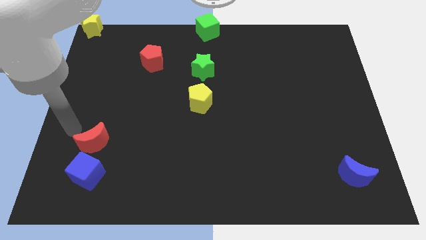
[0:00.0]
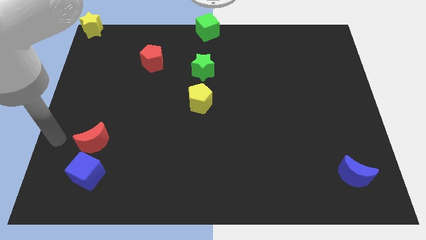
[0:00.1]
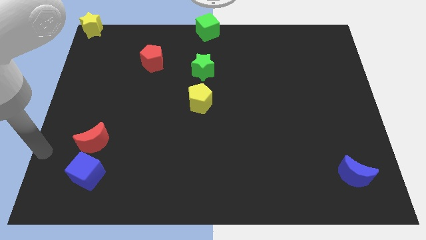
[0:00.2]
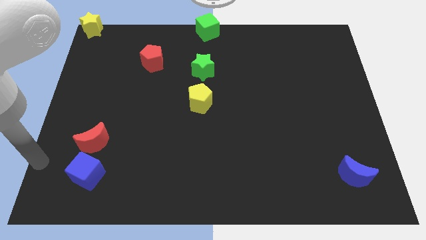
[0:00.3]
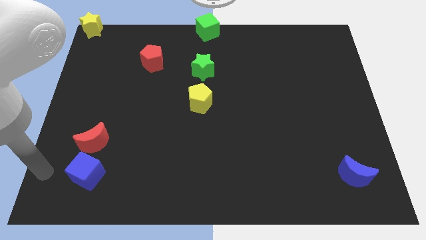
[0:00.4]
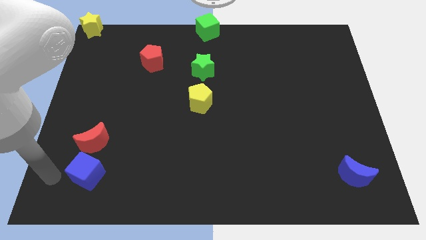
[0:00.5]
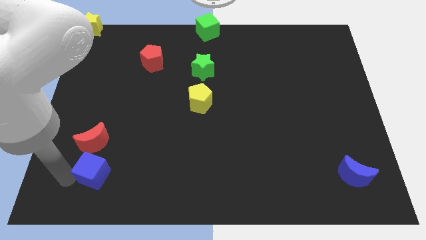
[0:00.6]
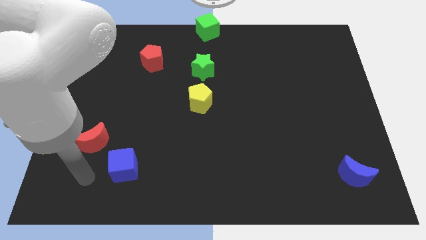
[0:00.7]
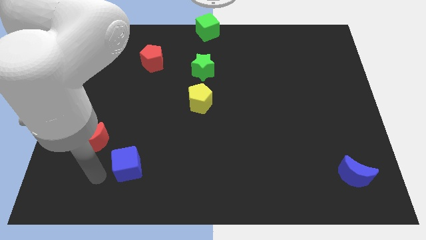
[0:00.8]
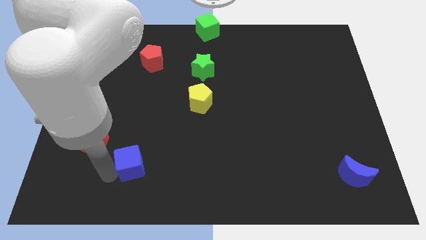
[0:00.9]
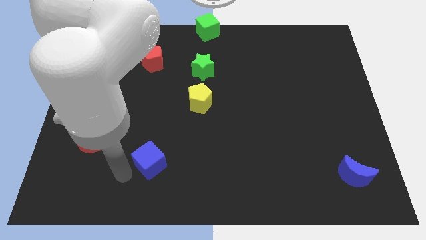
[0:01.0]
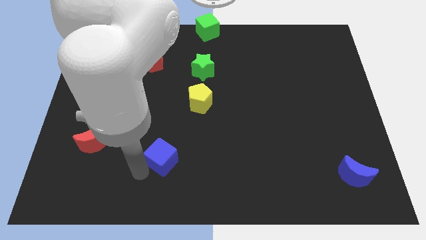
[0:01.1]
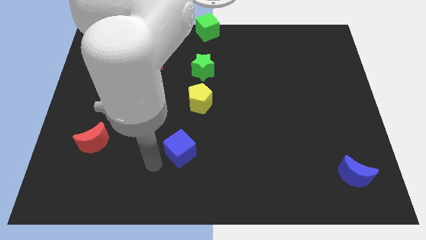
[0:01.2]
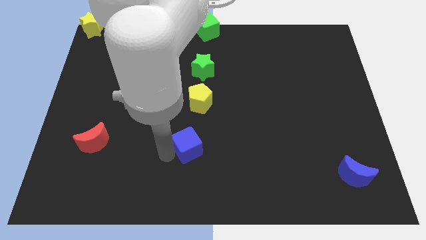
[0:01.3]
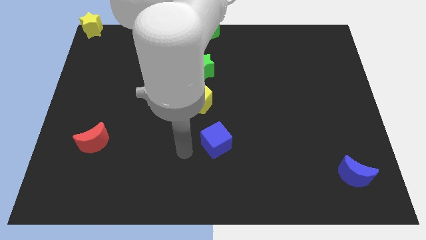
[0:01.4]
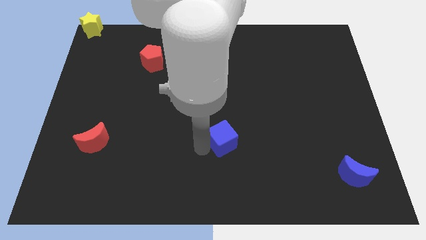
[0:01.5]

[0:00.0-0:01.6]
move the blue cube towards the center of the board

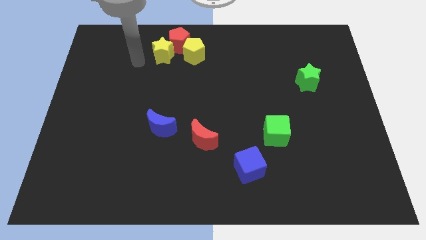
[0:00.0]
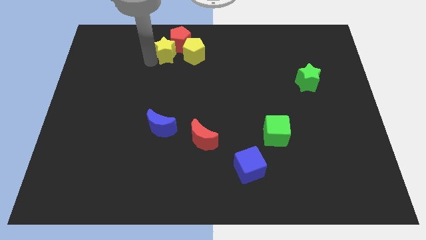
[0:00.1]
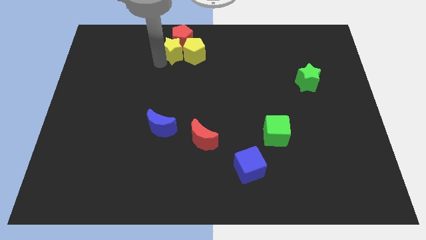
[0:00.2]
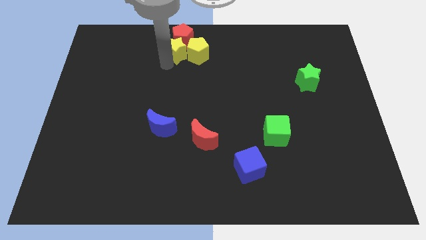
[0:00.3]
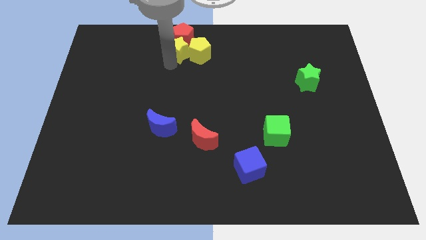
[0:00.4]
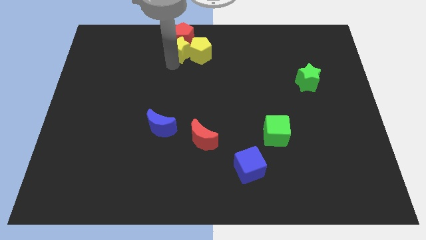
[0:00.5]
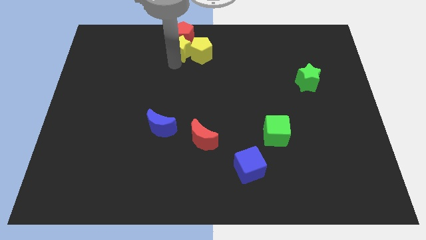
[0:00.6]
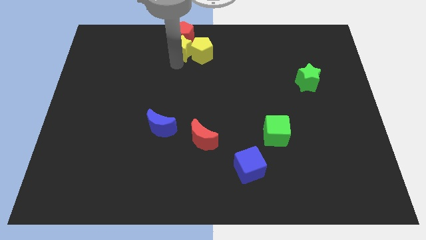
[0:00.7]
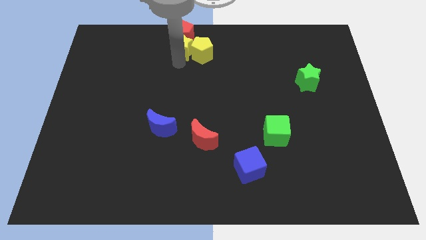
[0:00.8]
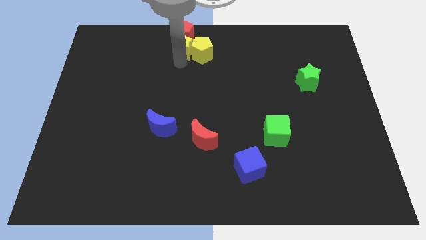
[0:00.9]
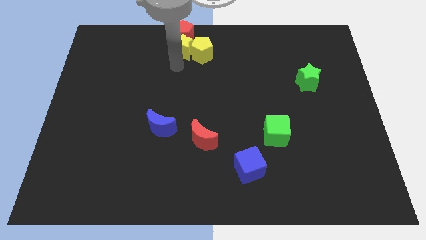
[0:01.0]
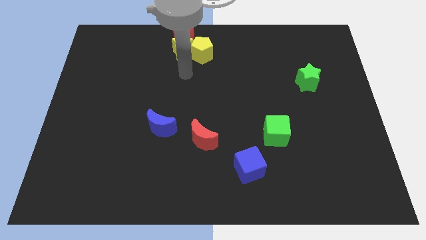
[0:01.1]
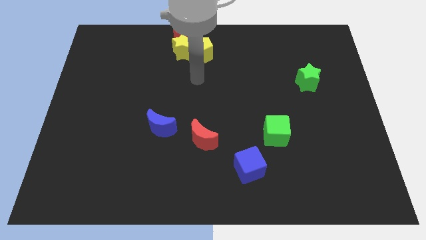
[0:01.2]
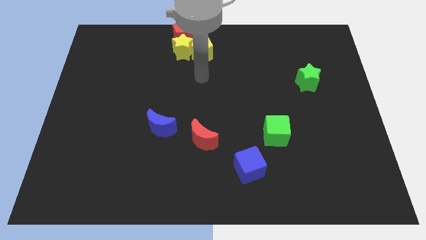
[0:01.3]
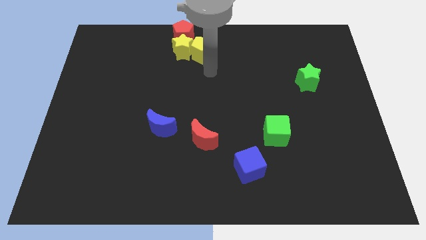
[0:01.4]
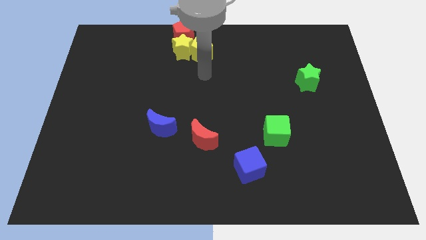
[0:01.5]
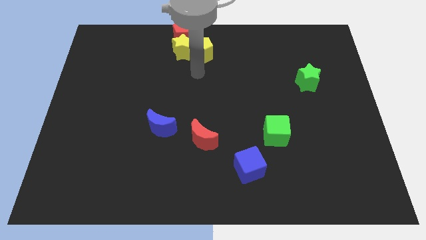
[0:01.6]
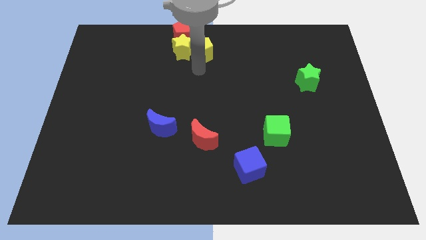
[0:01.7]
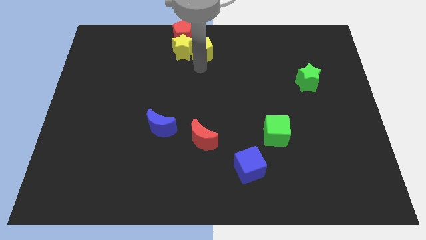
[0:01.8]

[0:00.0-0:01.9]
place yellow star below the red pentagon

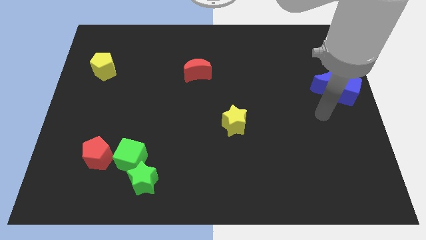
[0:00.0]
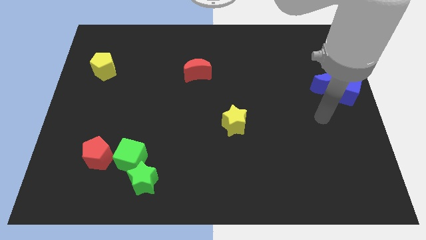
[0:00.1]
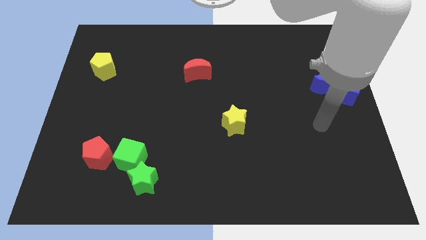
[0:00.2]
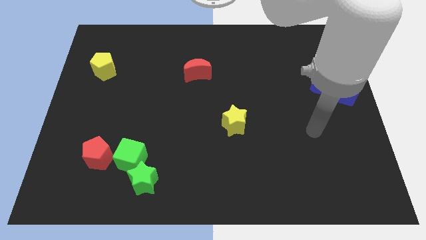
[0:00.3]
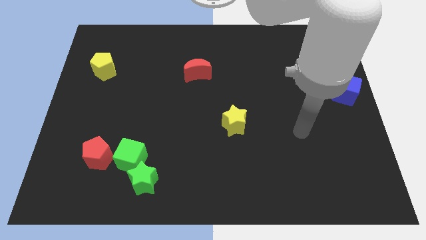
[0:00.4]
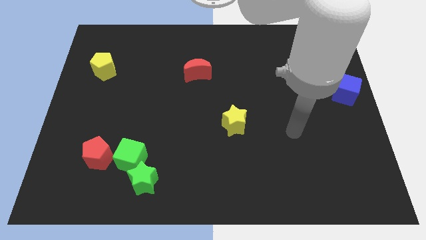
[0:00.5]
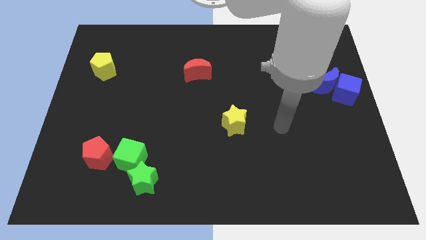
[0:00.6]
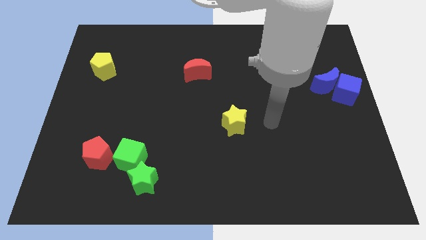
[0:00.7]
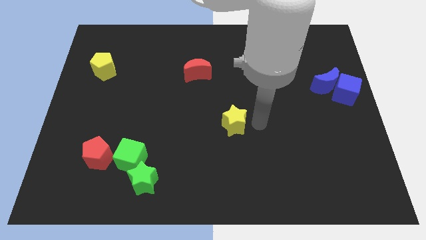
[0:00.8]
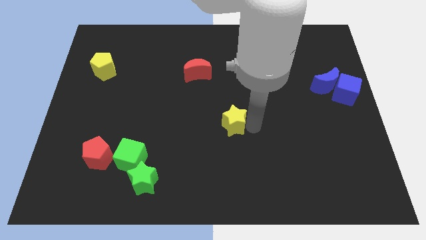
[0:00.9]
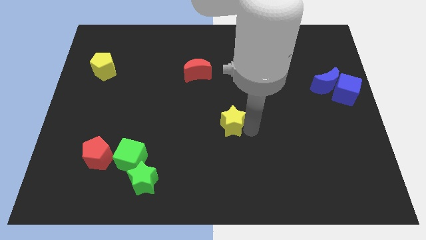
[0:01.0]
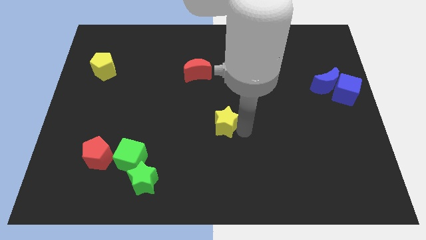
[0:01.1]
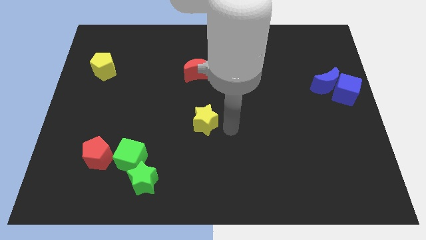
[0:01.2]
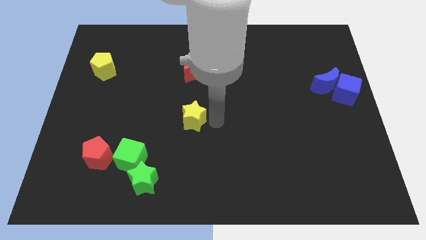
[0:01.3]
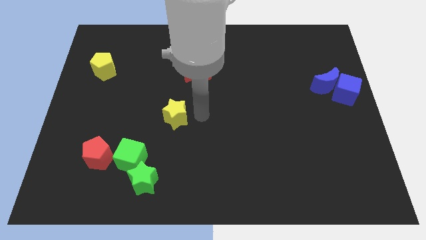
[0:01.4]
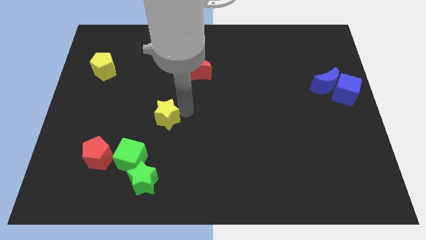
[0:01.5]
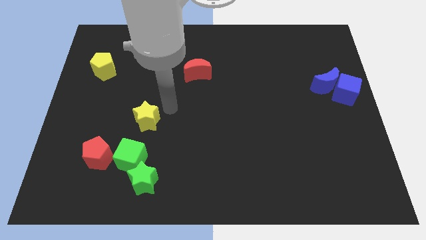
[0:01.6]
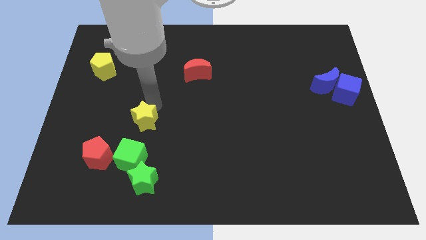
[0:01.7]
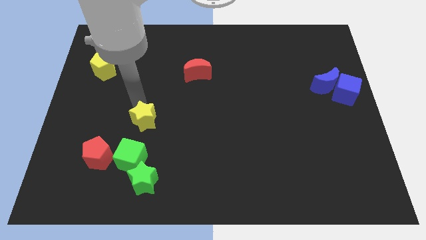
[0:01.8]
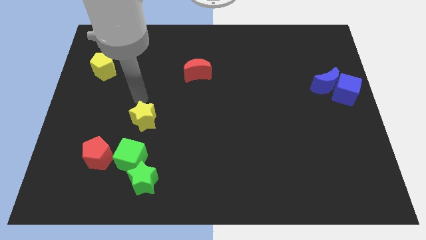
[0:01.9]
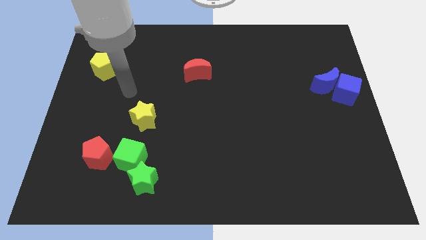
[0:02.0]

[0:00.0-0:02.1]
slide the yellow star to the top of the green cube

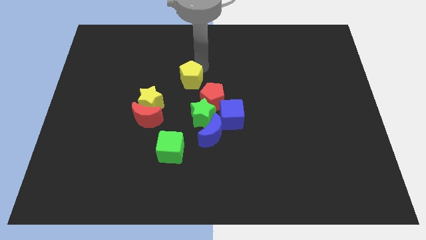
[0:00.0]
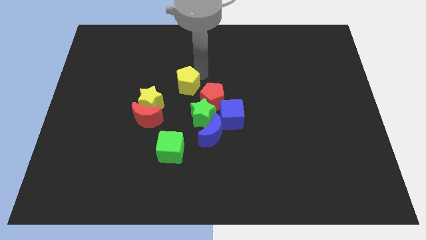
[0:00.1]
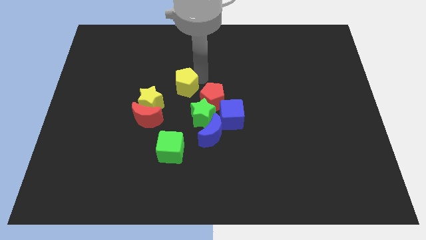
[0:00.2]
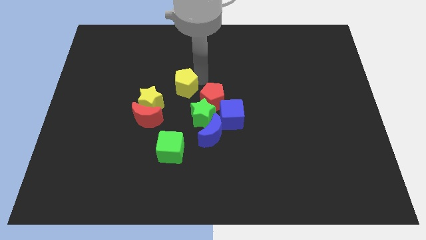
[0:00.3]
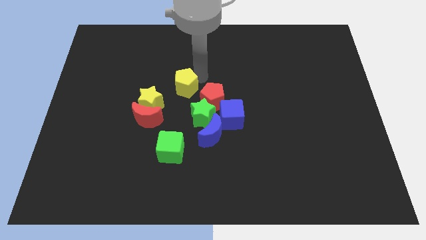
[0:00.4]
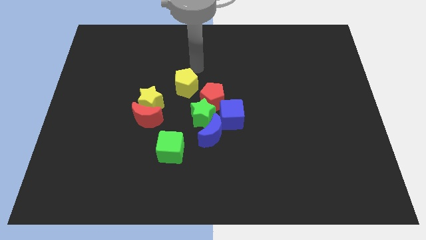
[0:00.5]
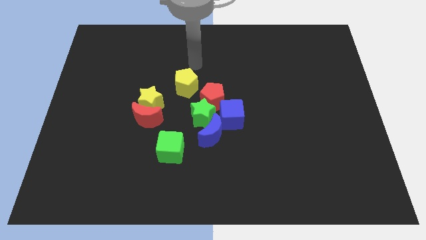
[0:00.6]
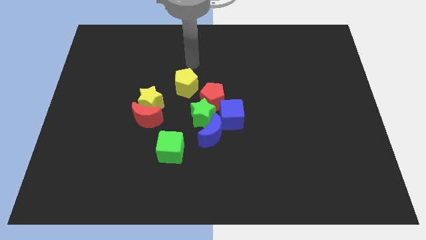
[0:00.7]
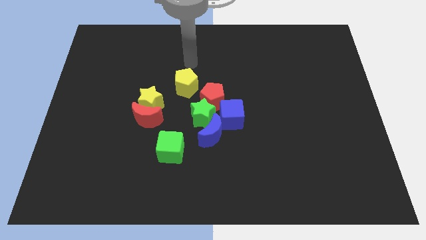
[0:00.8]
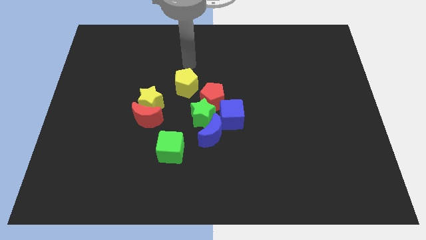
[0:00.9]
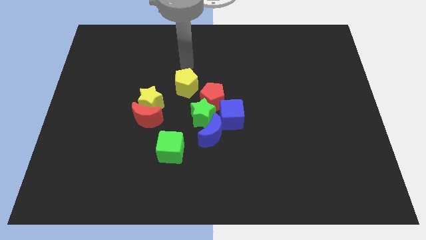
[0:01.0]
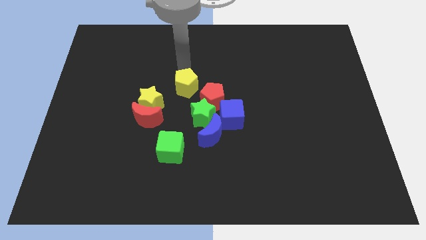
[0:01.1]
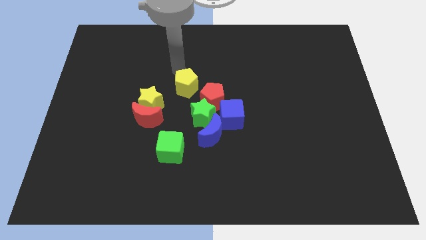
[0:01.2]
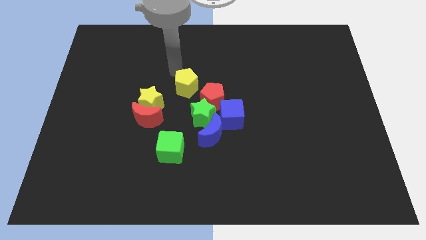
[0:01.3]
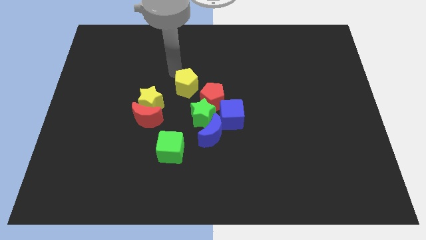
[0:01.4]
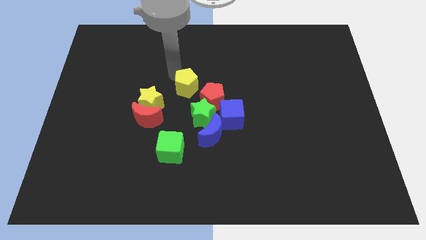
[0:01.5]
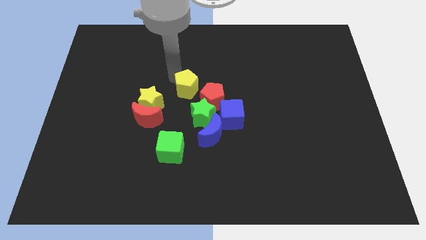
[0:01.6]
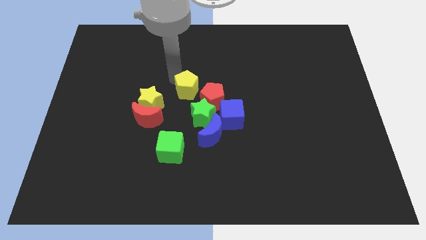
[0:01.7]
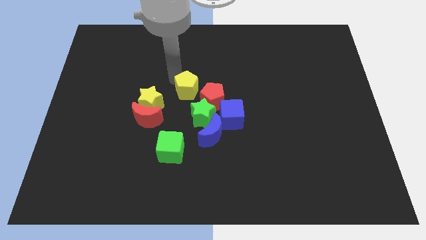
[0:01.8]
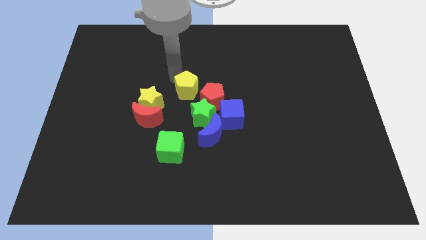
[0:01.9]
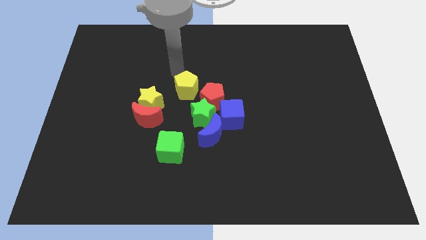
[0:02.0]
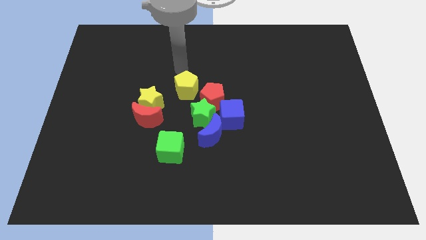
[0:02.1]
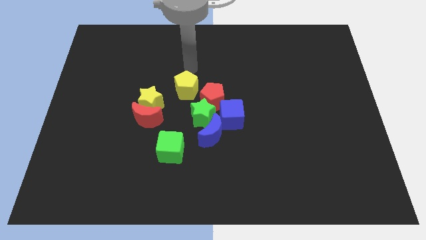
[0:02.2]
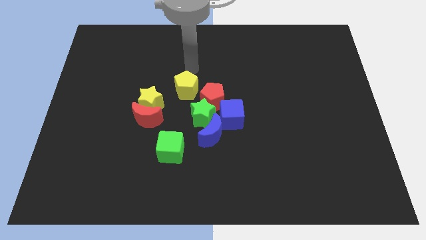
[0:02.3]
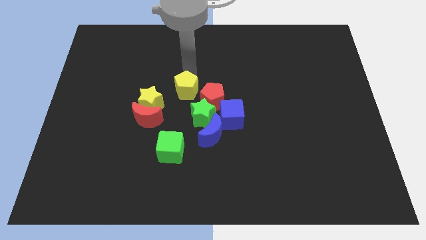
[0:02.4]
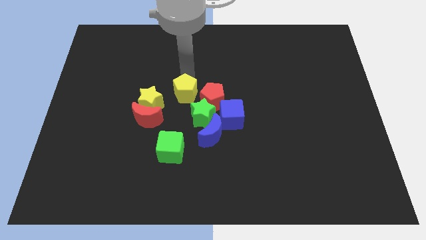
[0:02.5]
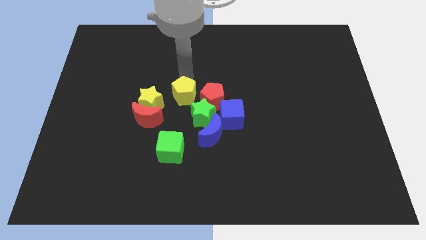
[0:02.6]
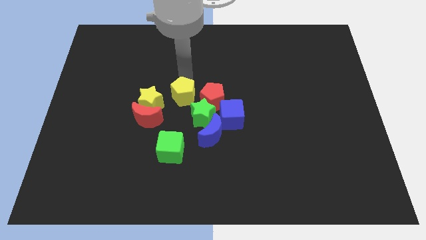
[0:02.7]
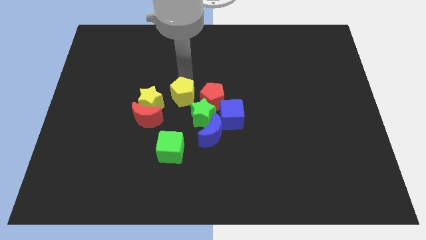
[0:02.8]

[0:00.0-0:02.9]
push the yellow pentagon between yellow star and red pentagon

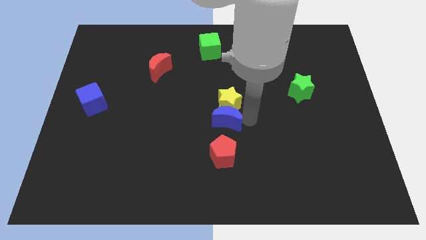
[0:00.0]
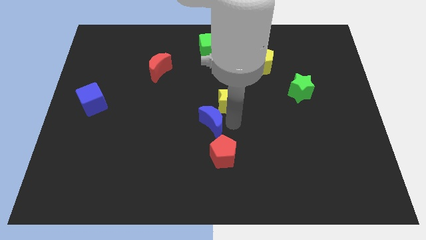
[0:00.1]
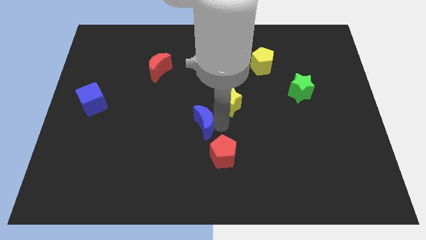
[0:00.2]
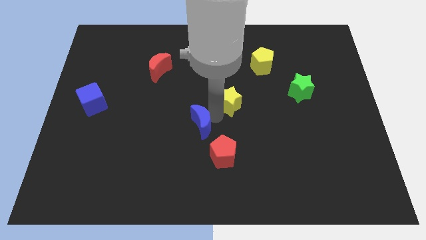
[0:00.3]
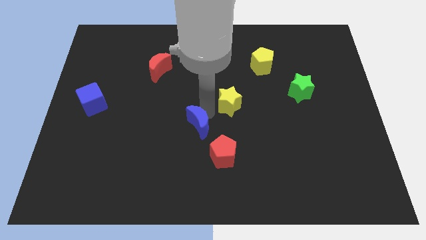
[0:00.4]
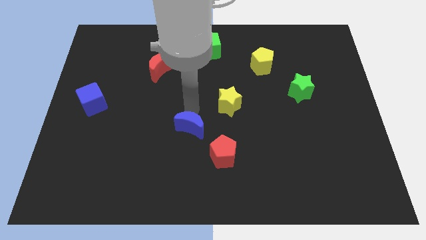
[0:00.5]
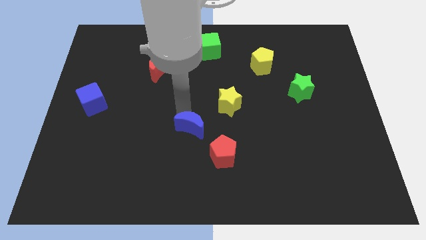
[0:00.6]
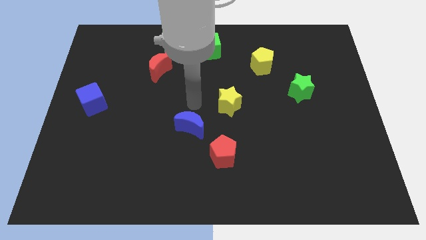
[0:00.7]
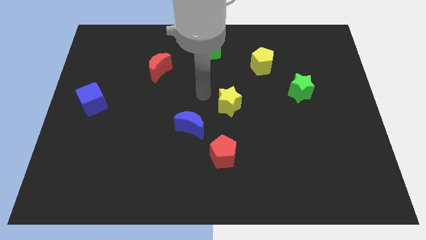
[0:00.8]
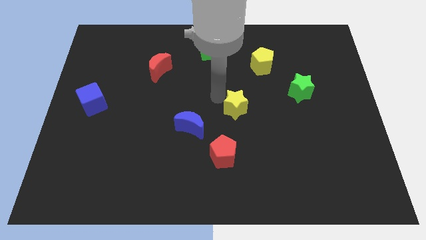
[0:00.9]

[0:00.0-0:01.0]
move the blue crescent to the left of the board
